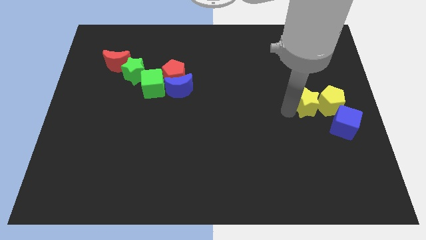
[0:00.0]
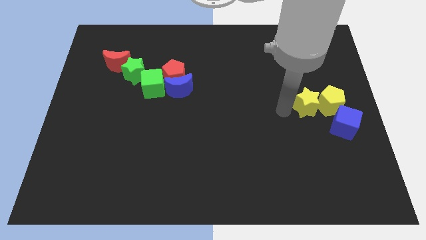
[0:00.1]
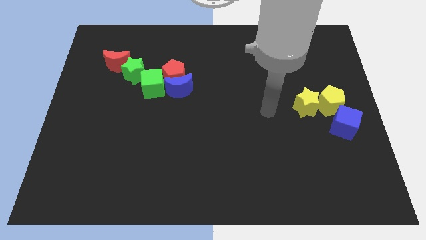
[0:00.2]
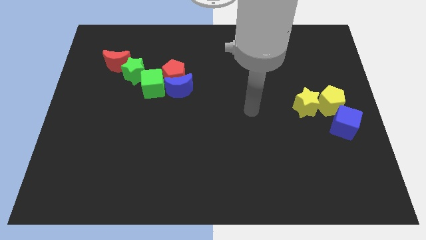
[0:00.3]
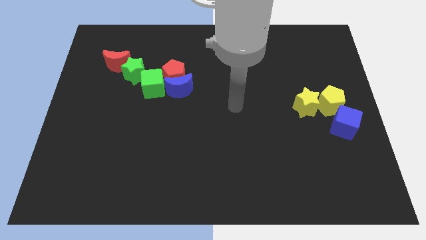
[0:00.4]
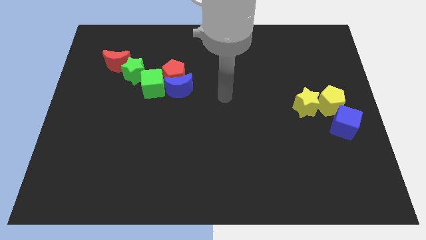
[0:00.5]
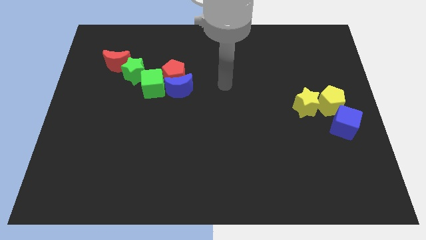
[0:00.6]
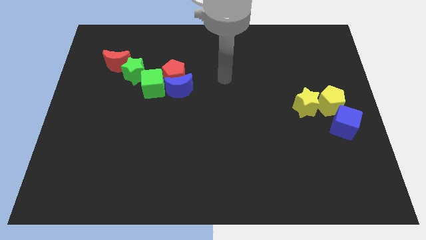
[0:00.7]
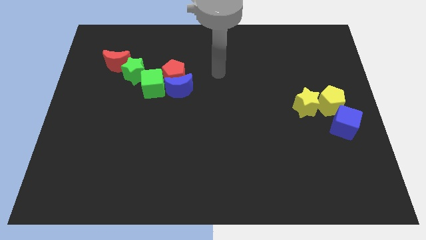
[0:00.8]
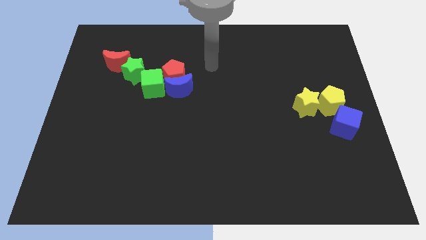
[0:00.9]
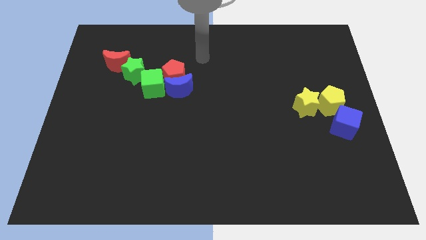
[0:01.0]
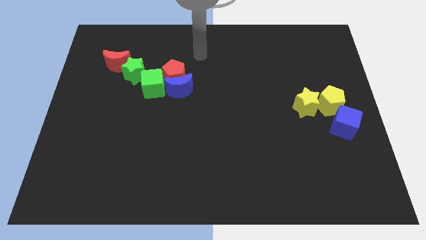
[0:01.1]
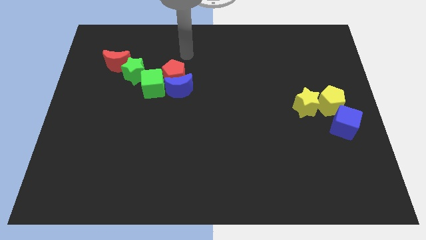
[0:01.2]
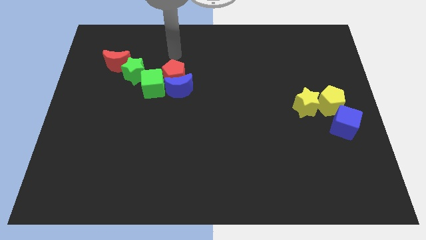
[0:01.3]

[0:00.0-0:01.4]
move your hand to the top of the red pentagon

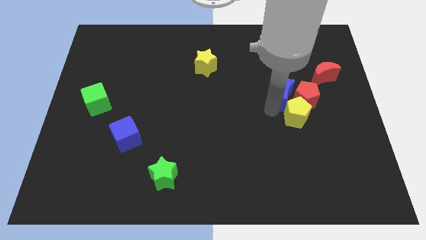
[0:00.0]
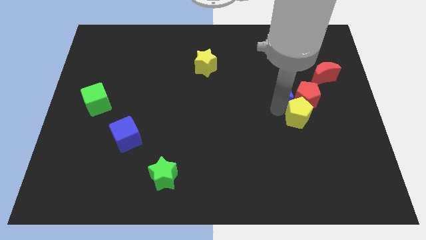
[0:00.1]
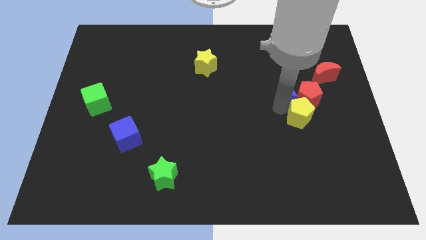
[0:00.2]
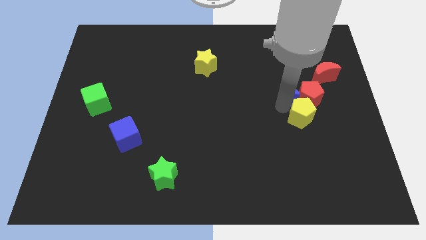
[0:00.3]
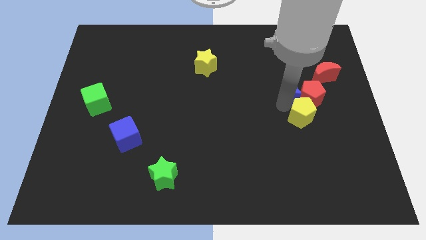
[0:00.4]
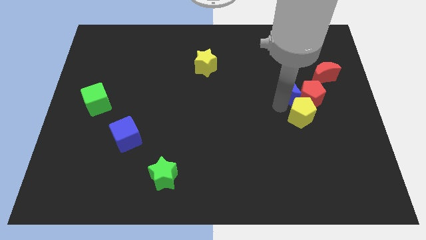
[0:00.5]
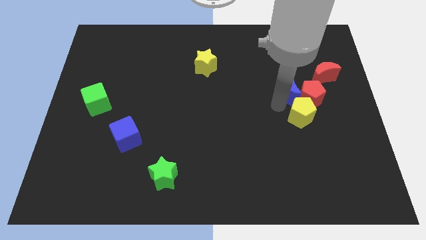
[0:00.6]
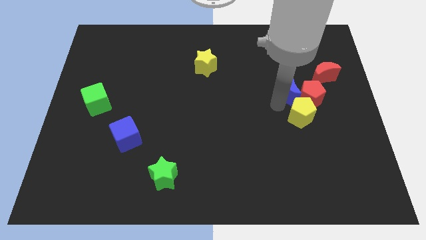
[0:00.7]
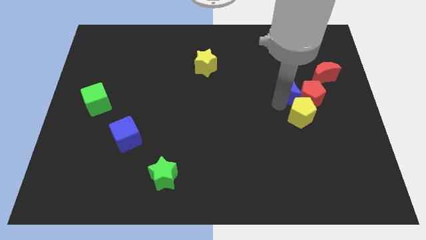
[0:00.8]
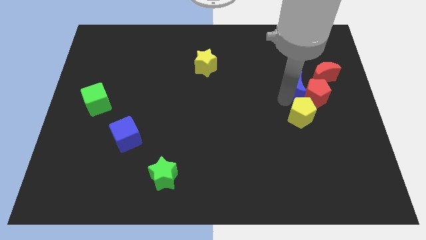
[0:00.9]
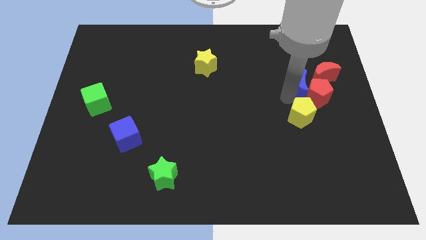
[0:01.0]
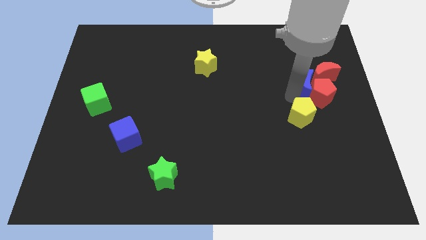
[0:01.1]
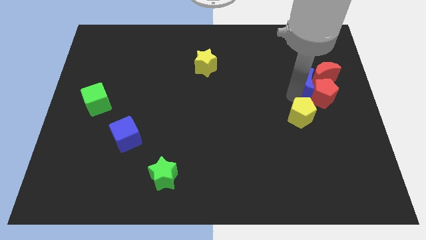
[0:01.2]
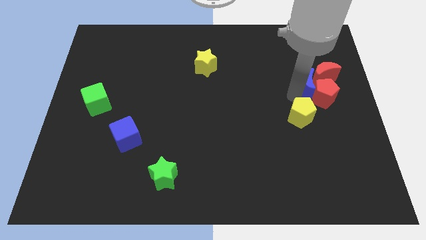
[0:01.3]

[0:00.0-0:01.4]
slide the blue moon into the red pentagon

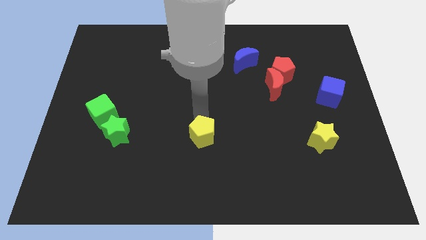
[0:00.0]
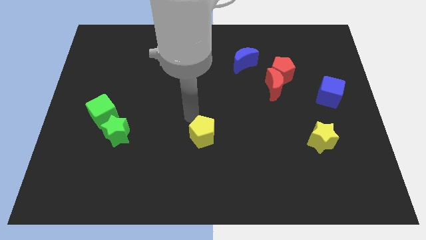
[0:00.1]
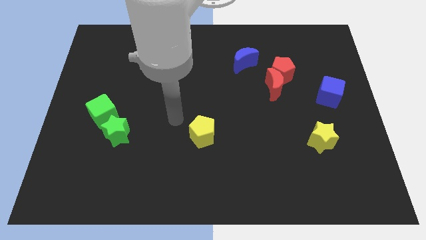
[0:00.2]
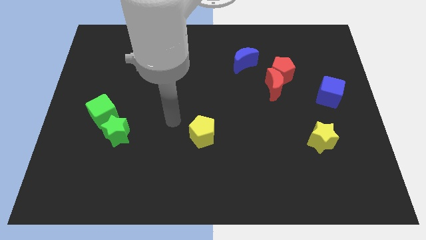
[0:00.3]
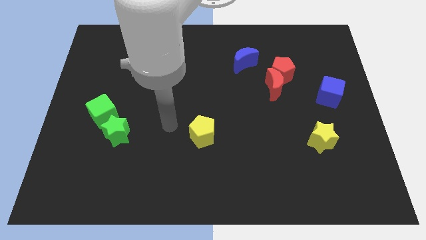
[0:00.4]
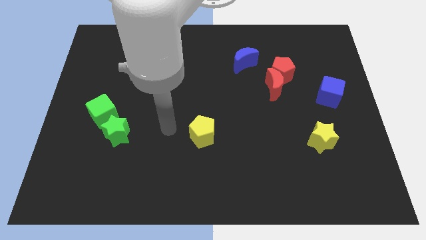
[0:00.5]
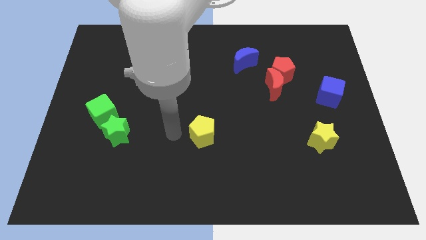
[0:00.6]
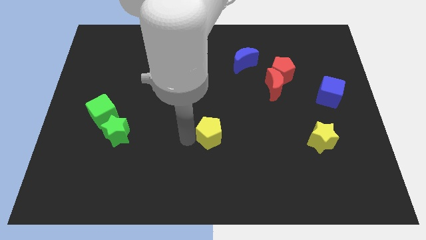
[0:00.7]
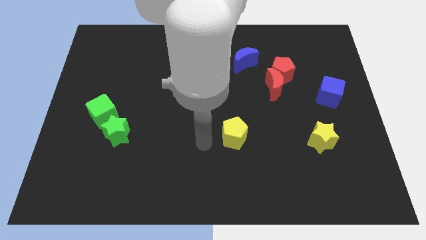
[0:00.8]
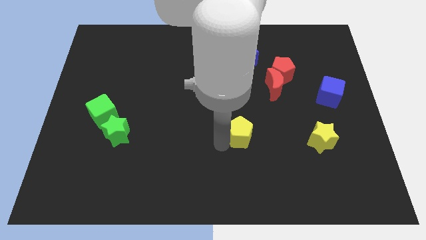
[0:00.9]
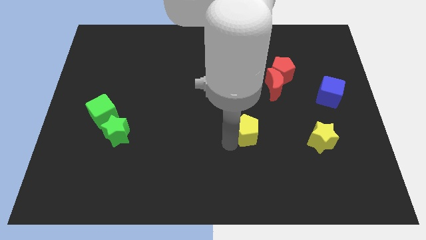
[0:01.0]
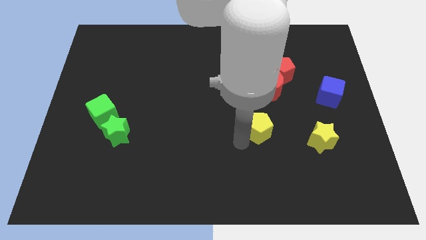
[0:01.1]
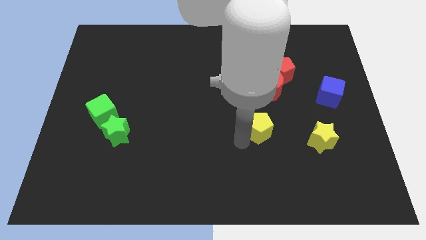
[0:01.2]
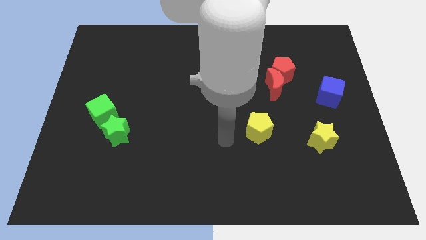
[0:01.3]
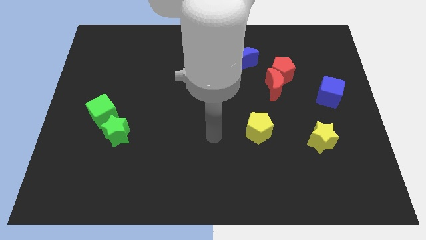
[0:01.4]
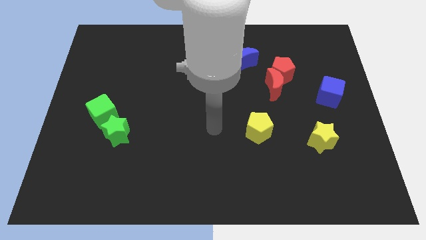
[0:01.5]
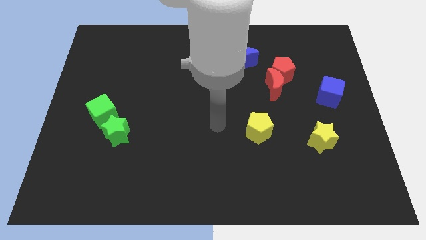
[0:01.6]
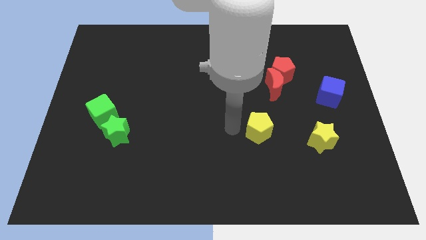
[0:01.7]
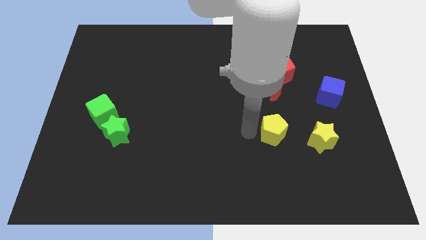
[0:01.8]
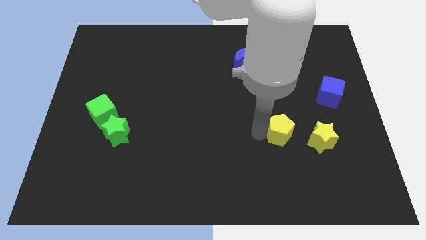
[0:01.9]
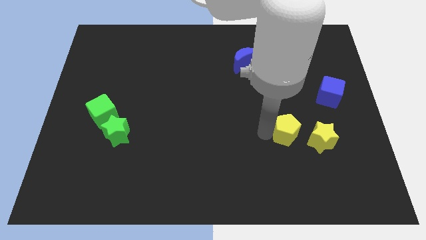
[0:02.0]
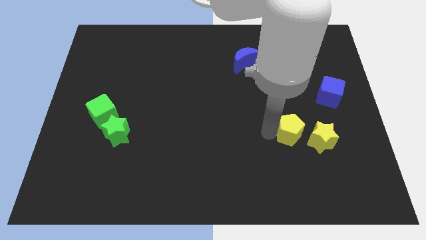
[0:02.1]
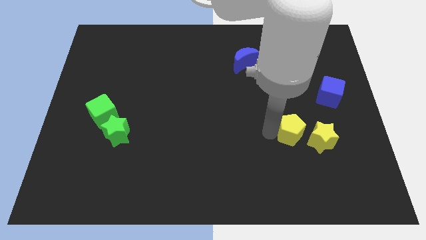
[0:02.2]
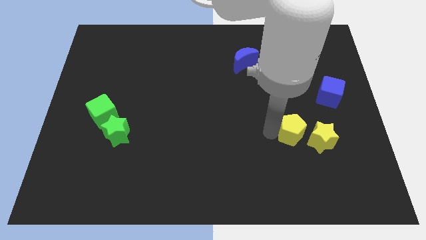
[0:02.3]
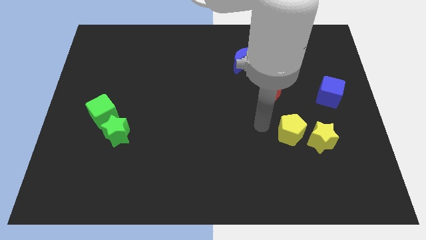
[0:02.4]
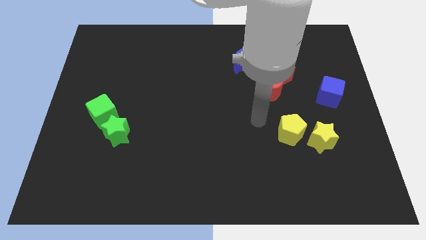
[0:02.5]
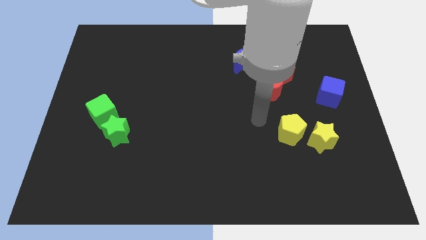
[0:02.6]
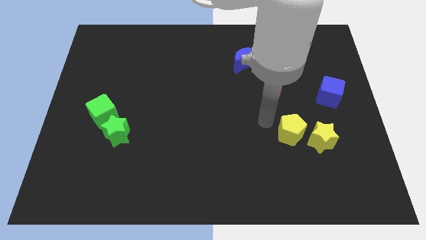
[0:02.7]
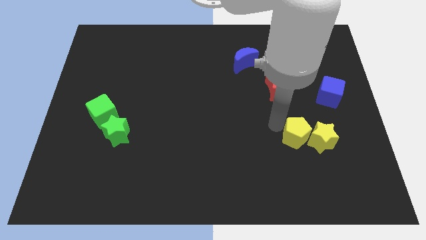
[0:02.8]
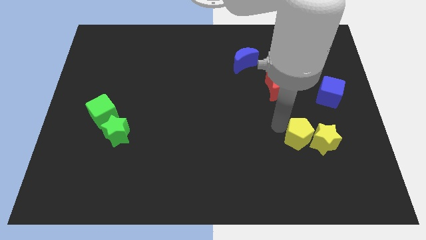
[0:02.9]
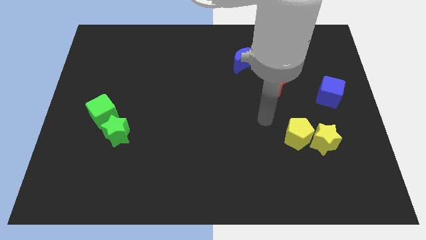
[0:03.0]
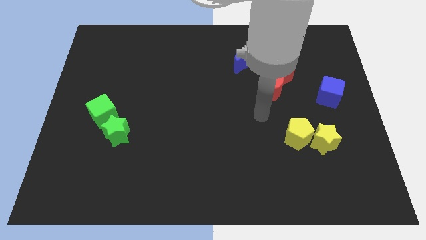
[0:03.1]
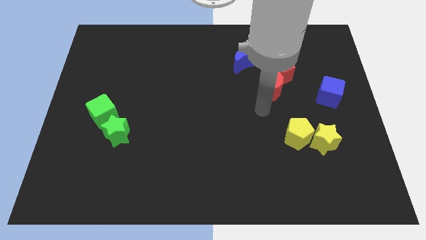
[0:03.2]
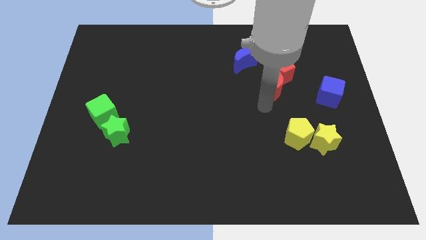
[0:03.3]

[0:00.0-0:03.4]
move yellow pentagon close to yellow star

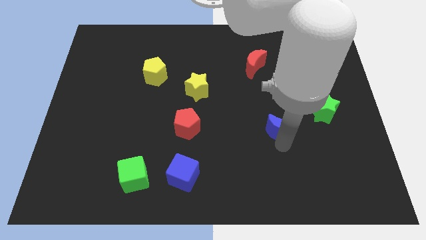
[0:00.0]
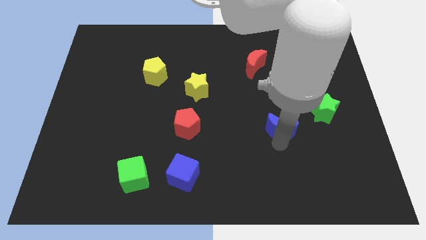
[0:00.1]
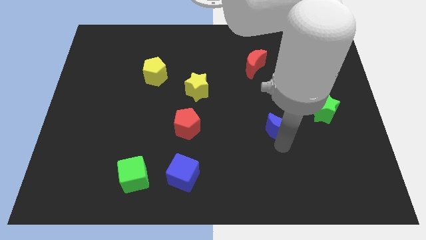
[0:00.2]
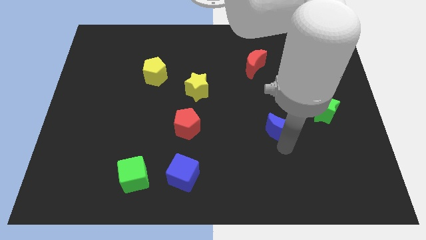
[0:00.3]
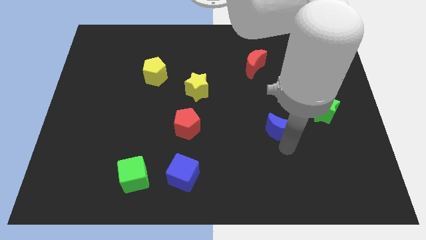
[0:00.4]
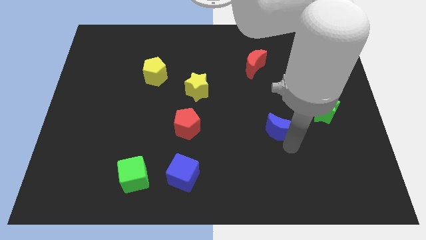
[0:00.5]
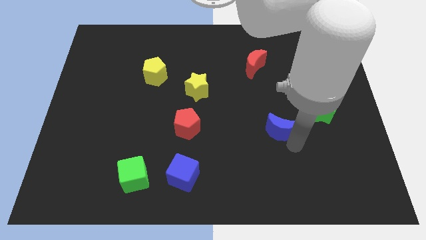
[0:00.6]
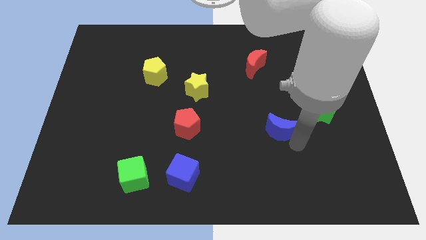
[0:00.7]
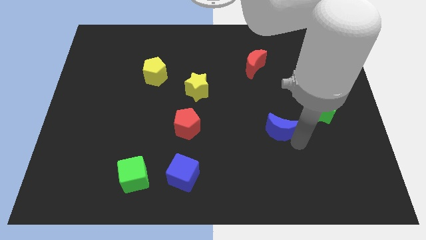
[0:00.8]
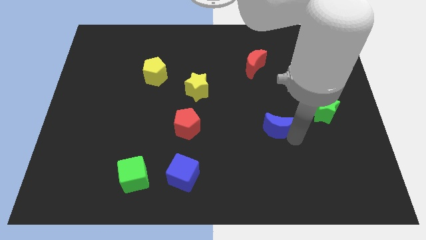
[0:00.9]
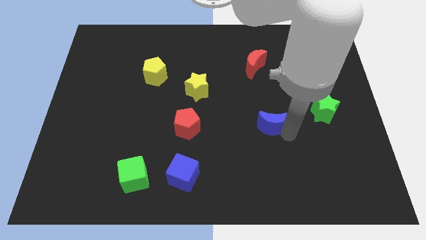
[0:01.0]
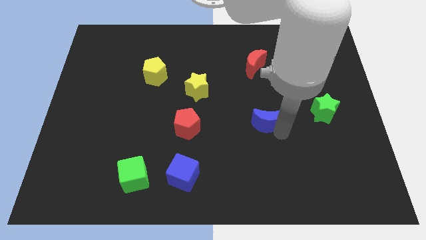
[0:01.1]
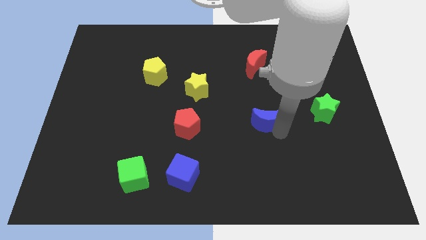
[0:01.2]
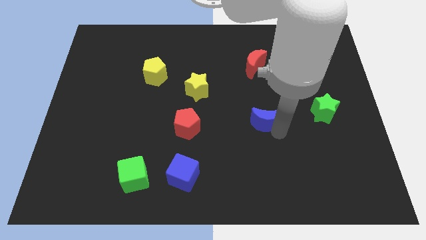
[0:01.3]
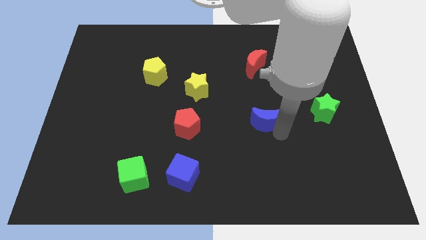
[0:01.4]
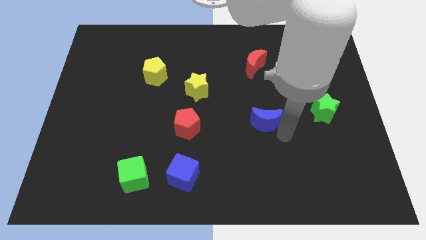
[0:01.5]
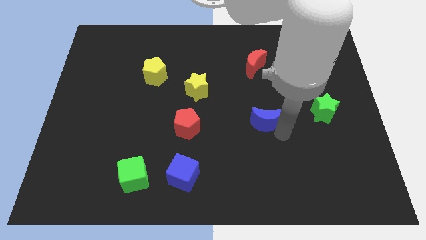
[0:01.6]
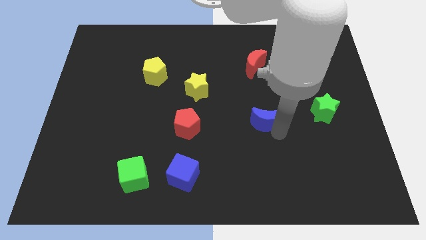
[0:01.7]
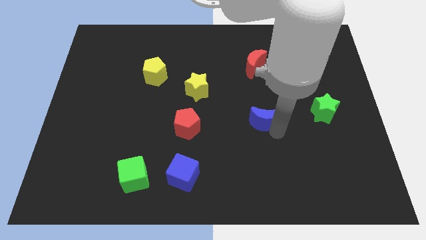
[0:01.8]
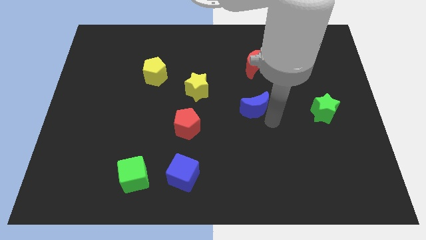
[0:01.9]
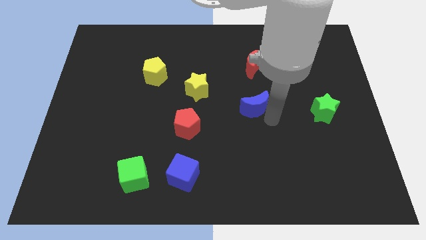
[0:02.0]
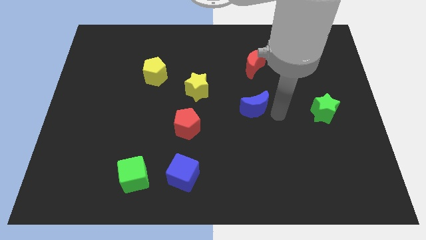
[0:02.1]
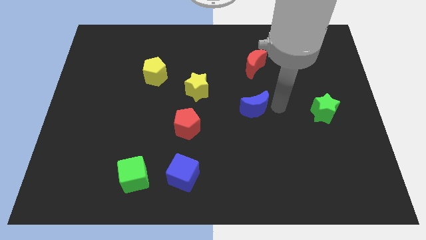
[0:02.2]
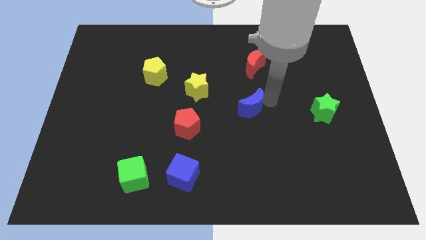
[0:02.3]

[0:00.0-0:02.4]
push blue moon towards top

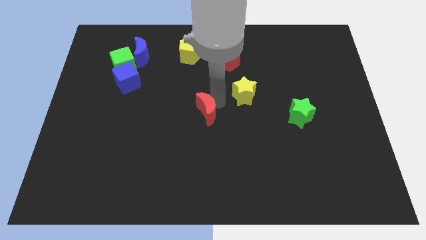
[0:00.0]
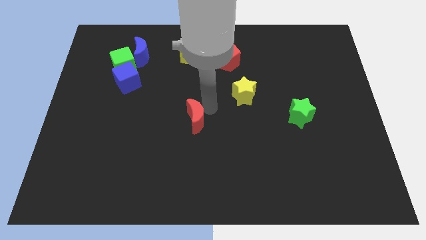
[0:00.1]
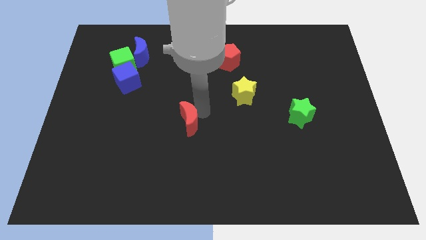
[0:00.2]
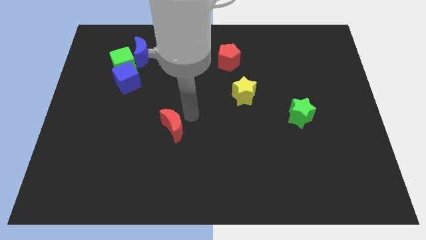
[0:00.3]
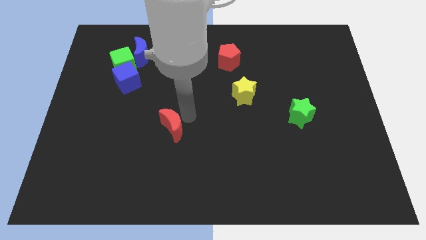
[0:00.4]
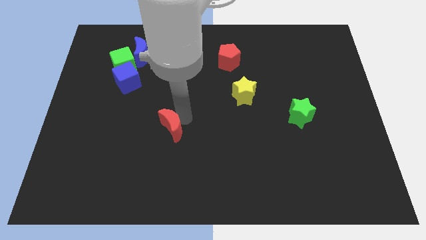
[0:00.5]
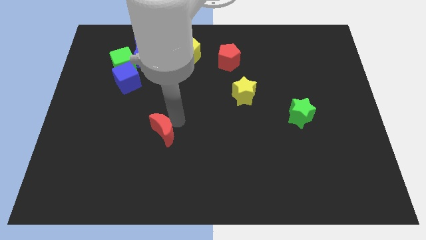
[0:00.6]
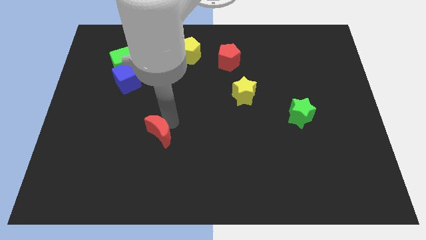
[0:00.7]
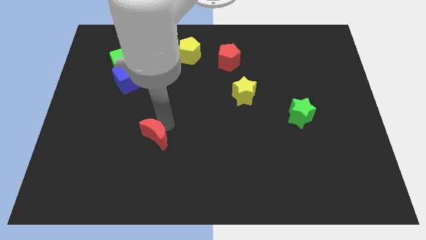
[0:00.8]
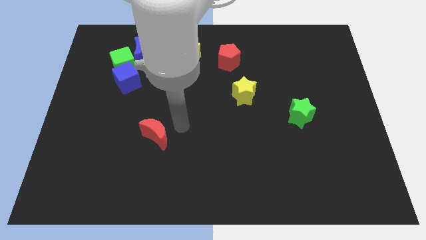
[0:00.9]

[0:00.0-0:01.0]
push the red crescent towards the bottom left of the board
